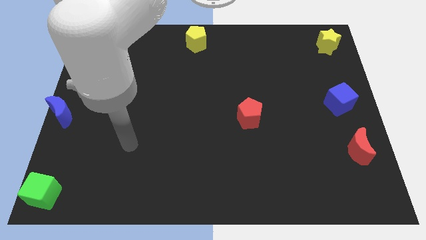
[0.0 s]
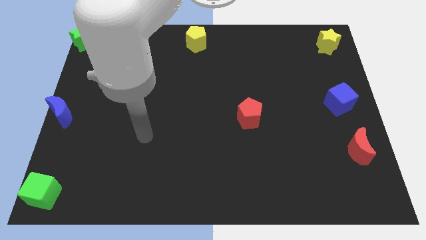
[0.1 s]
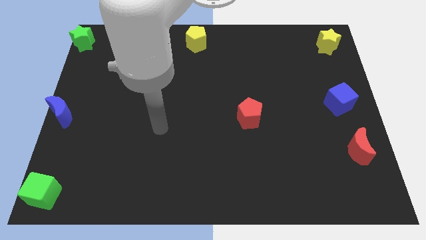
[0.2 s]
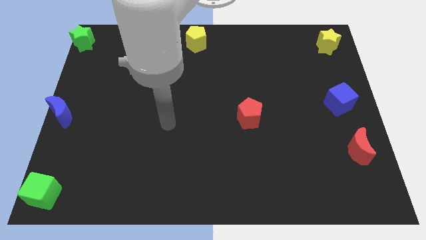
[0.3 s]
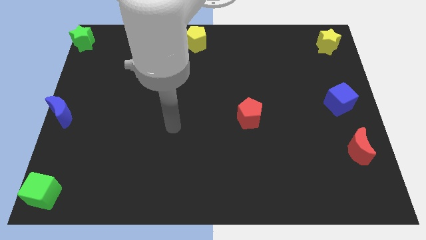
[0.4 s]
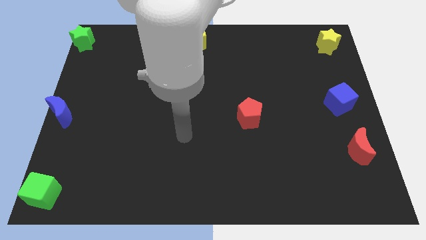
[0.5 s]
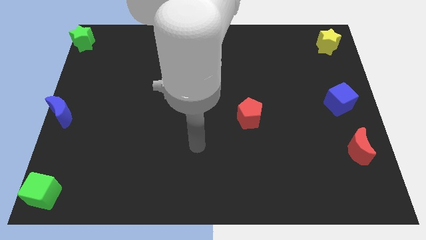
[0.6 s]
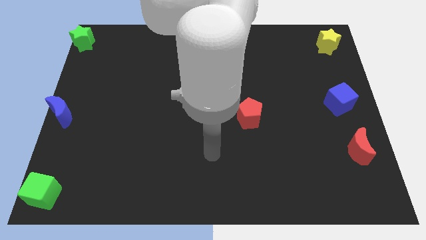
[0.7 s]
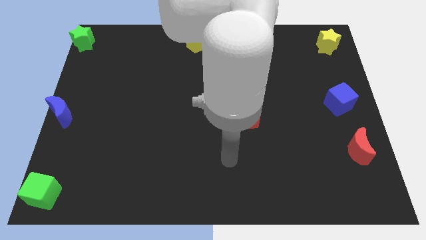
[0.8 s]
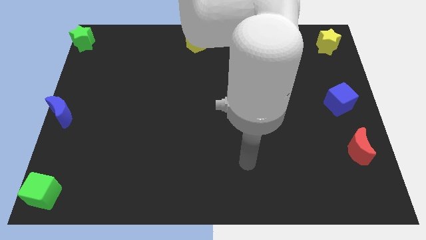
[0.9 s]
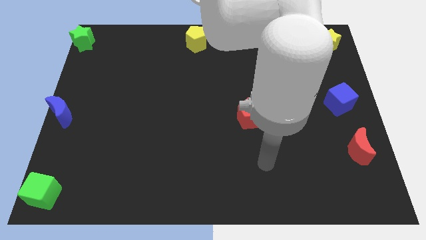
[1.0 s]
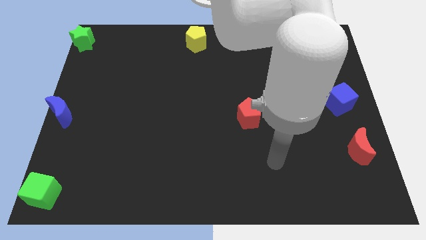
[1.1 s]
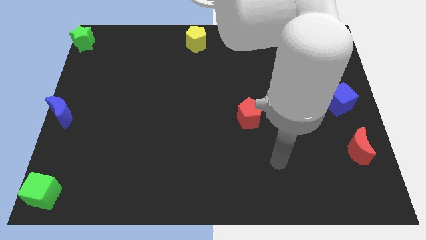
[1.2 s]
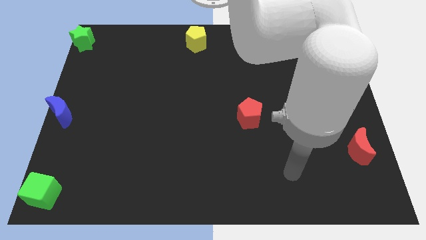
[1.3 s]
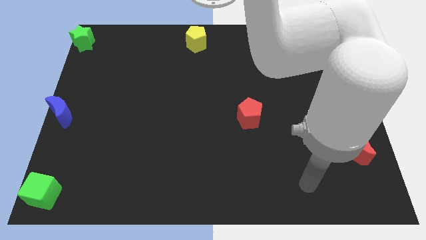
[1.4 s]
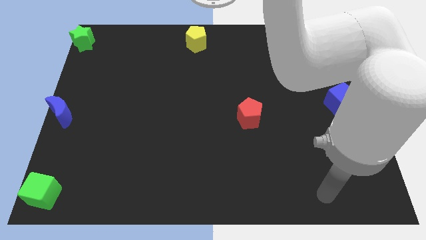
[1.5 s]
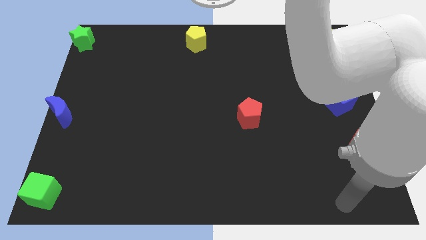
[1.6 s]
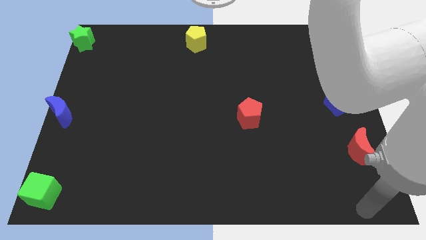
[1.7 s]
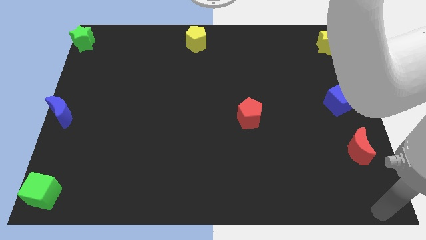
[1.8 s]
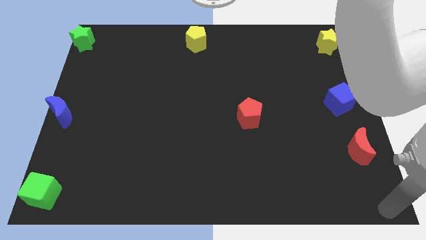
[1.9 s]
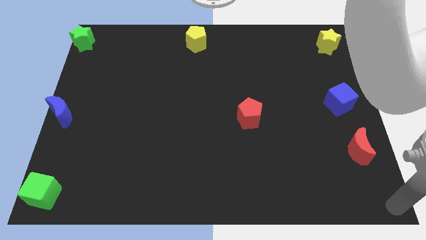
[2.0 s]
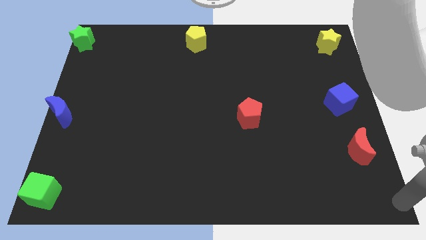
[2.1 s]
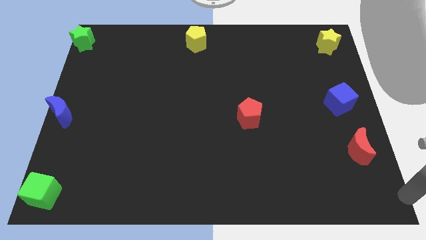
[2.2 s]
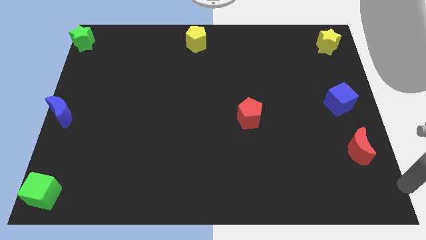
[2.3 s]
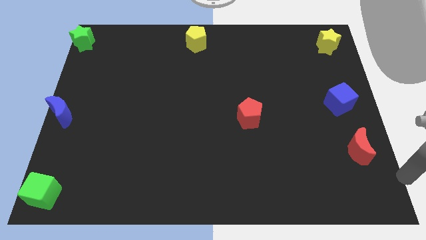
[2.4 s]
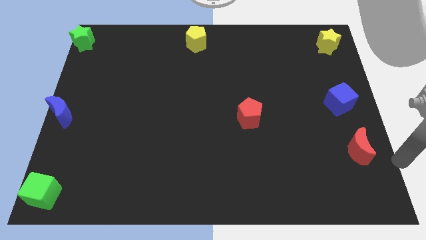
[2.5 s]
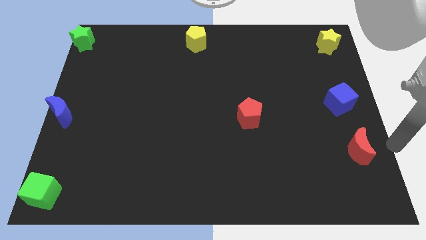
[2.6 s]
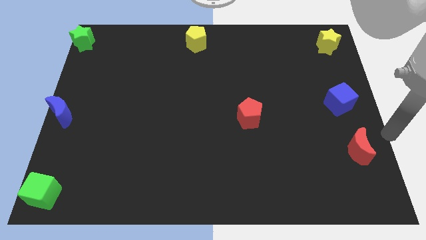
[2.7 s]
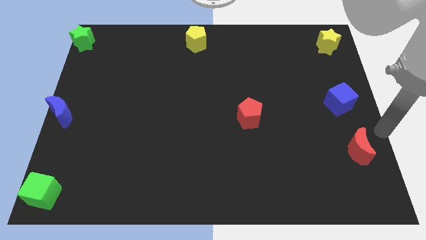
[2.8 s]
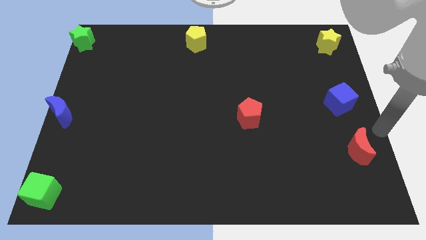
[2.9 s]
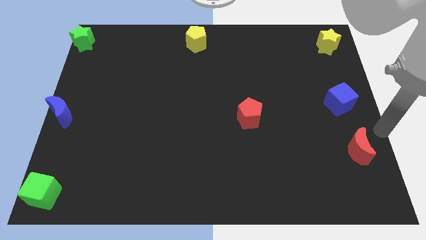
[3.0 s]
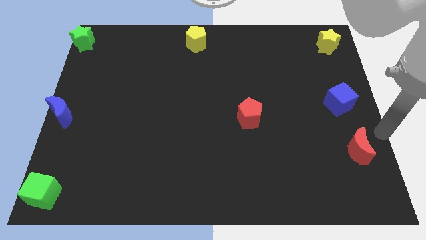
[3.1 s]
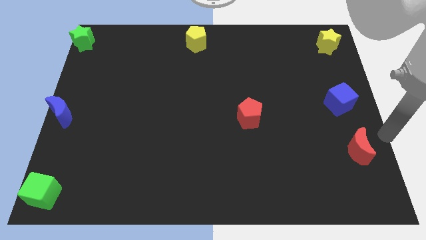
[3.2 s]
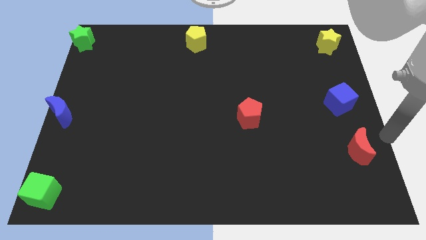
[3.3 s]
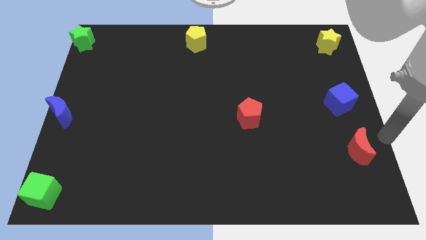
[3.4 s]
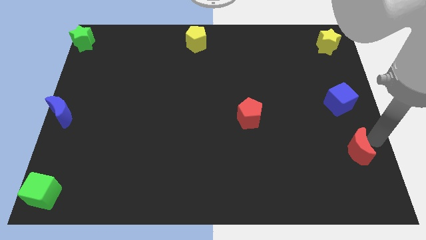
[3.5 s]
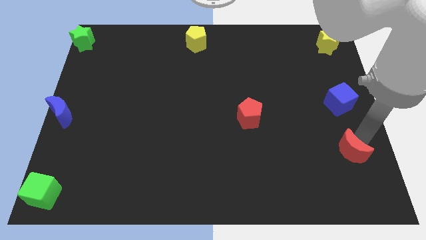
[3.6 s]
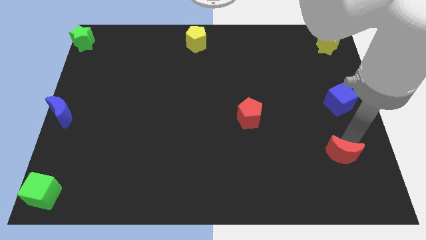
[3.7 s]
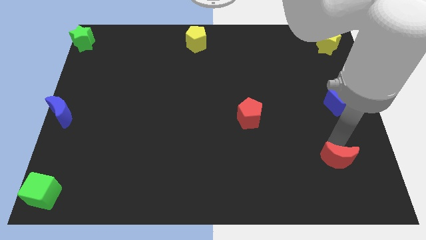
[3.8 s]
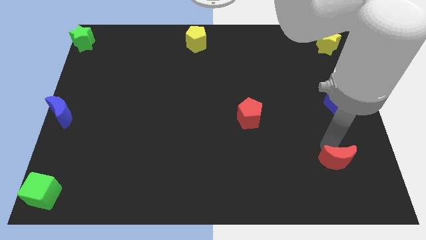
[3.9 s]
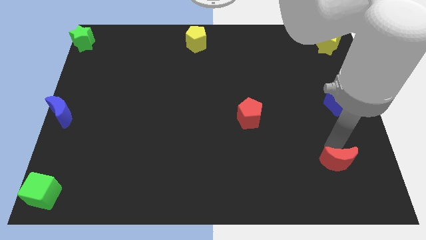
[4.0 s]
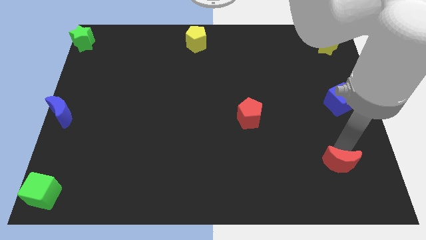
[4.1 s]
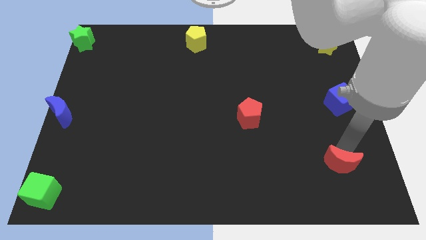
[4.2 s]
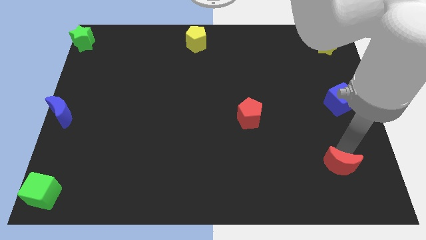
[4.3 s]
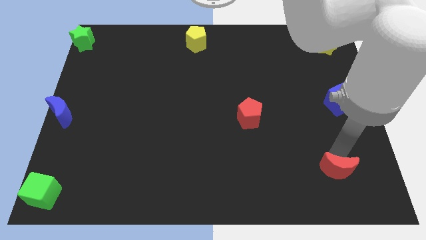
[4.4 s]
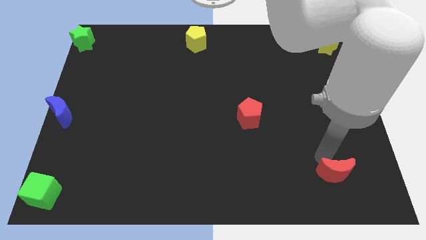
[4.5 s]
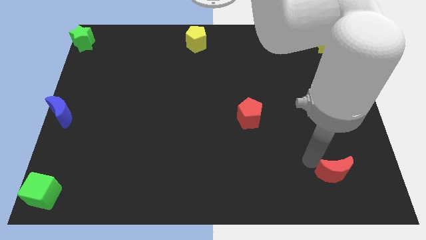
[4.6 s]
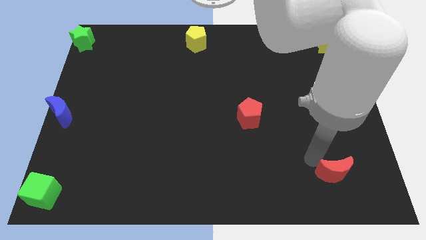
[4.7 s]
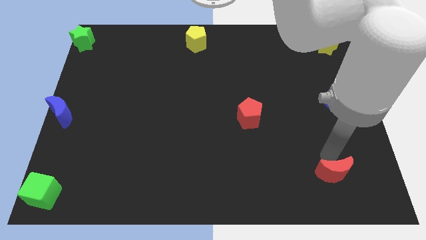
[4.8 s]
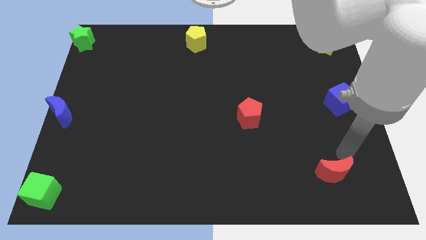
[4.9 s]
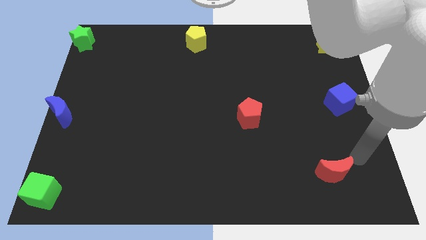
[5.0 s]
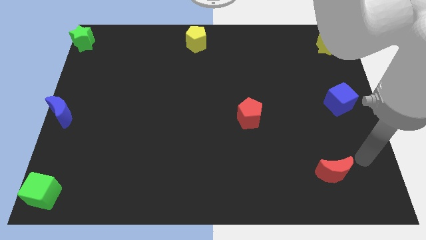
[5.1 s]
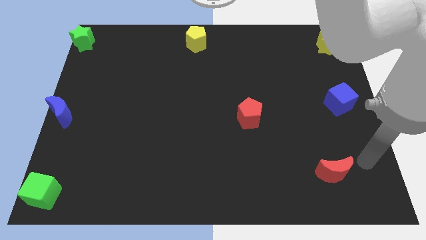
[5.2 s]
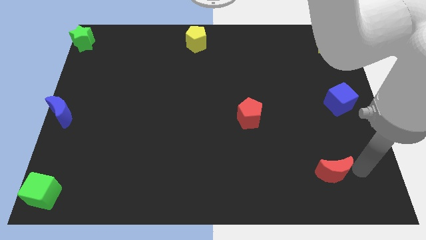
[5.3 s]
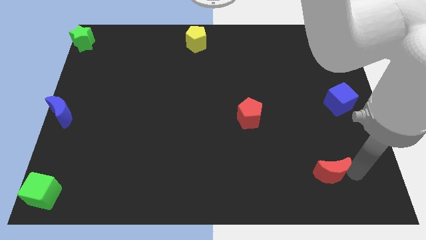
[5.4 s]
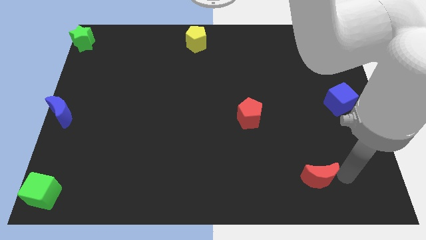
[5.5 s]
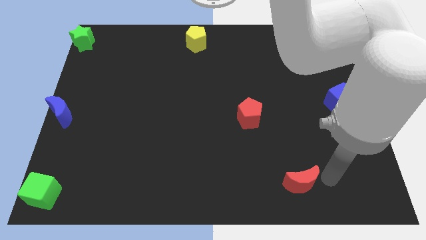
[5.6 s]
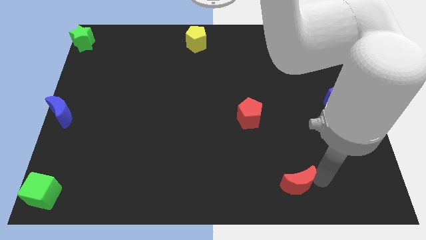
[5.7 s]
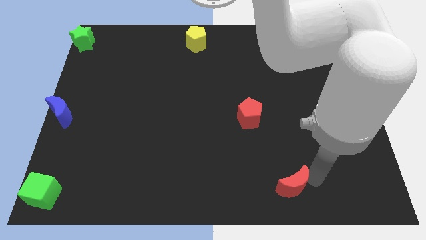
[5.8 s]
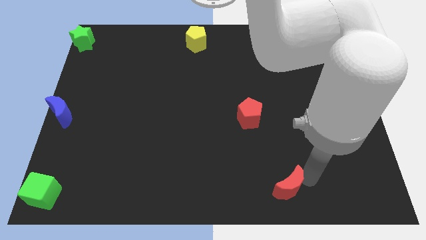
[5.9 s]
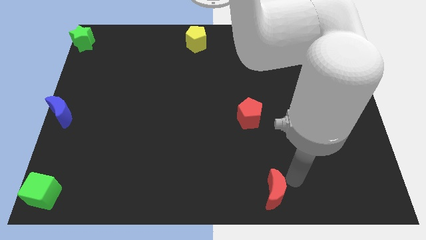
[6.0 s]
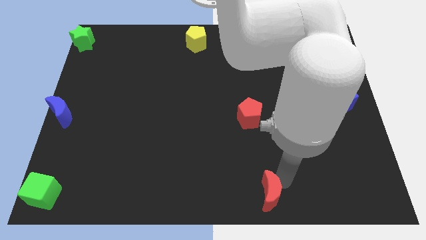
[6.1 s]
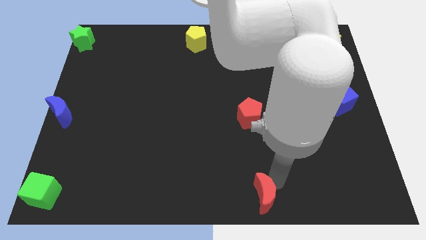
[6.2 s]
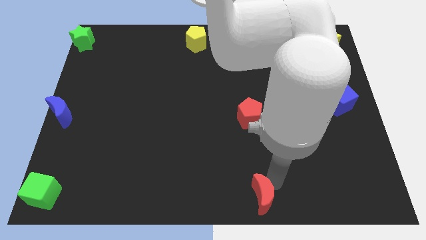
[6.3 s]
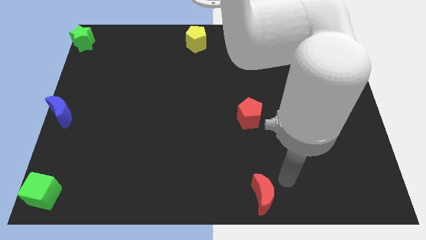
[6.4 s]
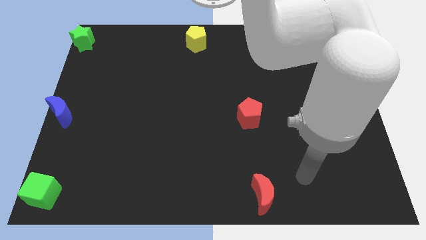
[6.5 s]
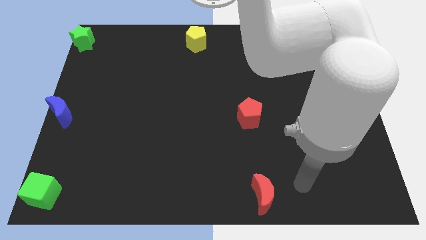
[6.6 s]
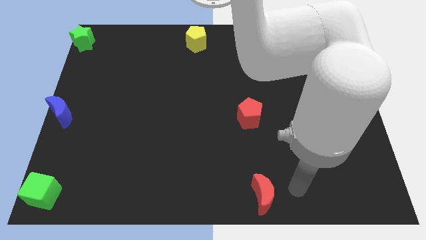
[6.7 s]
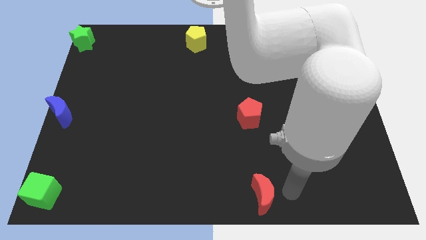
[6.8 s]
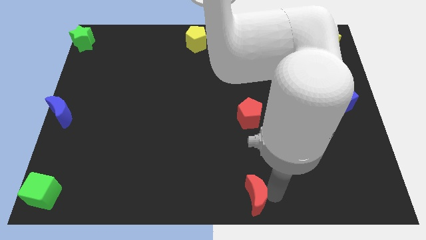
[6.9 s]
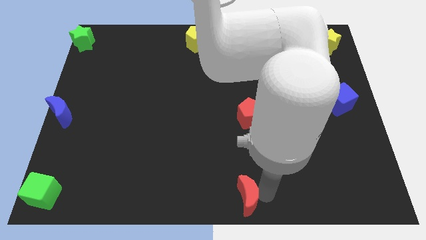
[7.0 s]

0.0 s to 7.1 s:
move red moon below the red pentagon

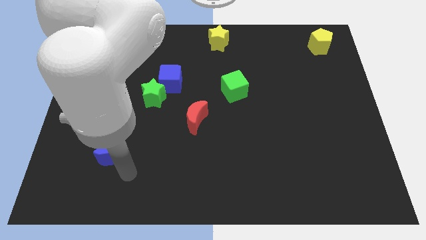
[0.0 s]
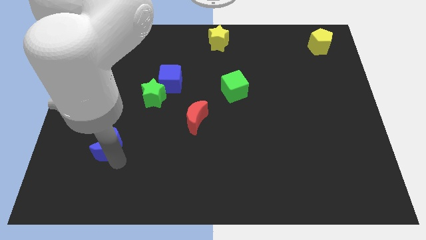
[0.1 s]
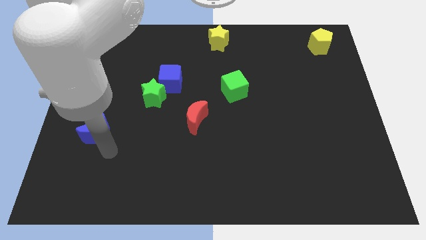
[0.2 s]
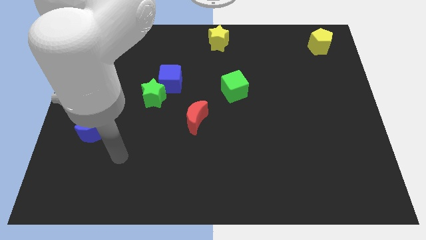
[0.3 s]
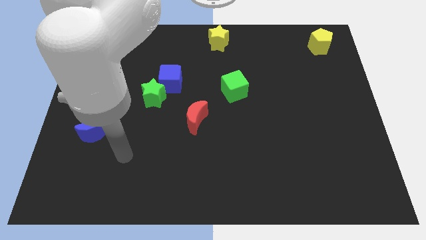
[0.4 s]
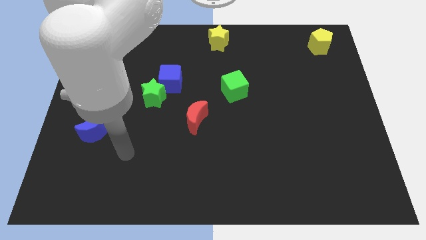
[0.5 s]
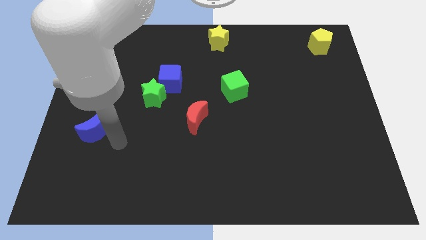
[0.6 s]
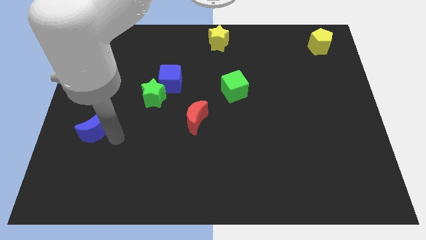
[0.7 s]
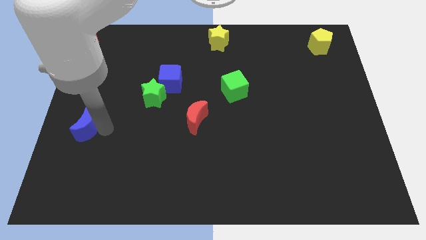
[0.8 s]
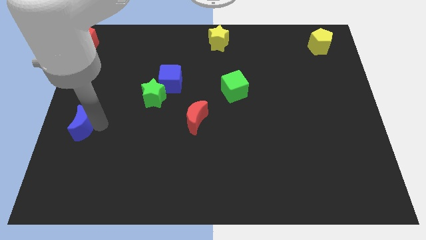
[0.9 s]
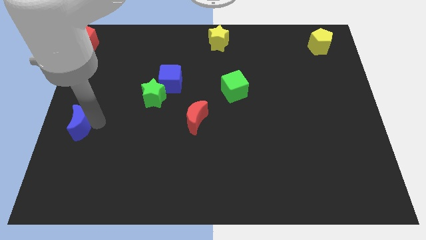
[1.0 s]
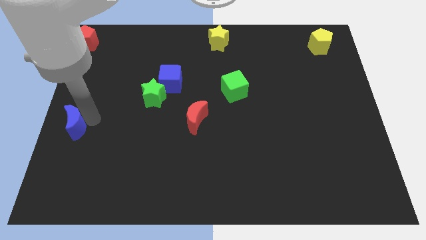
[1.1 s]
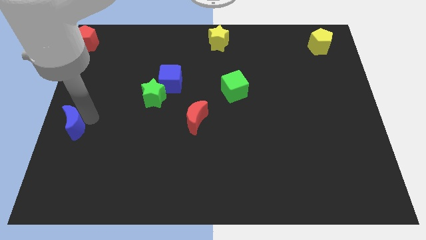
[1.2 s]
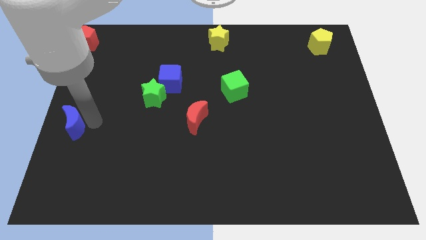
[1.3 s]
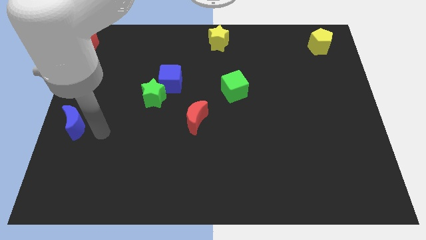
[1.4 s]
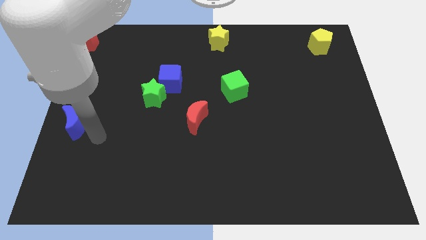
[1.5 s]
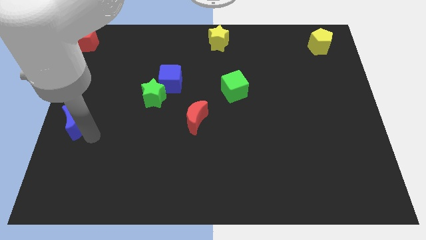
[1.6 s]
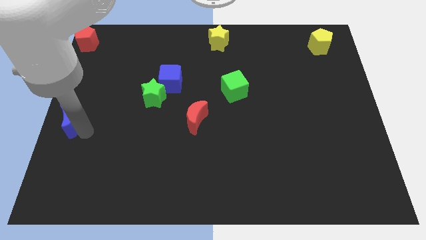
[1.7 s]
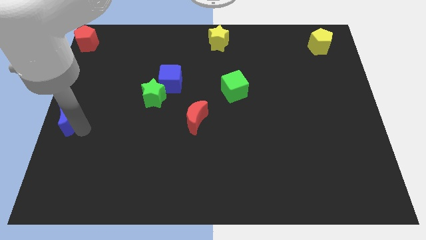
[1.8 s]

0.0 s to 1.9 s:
place the blue moon towards the left center of the board

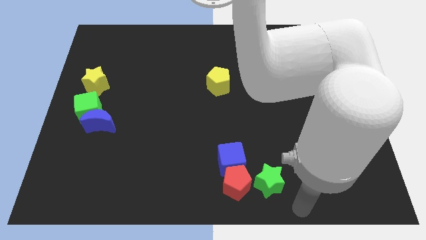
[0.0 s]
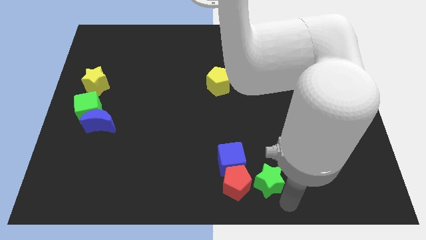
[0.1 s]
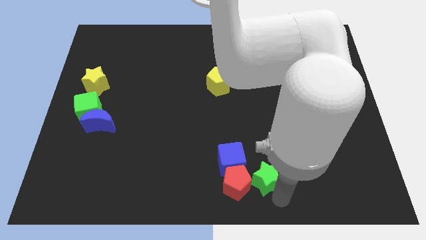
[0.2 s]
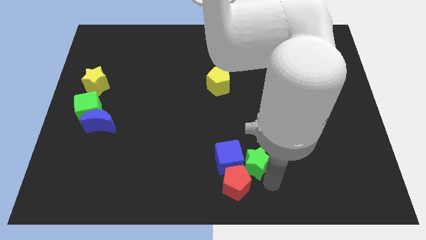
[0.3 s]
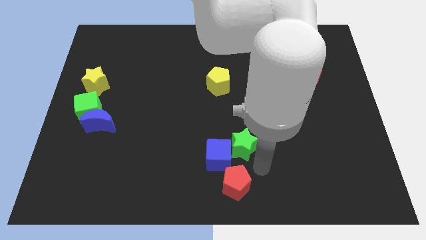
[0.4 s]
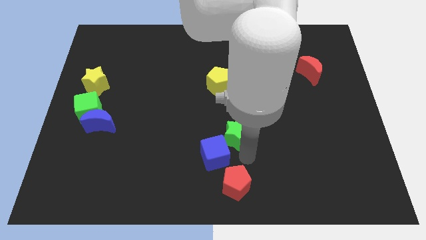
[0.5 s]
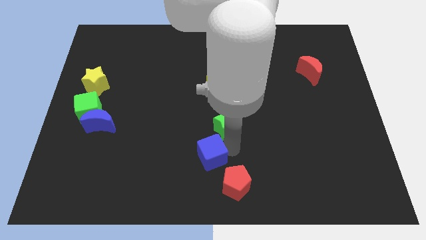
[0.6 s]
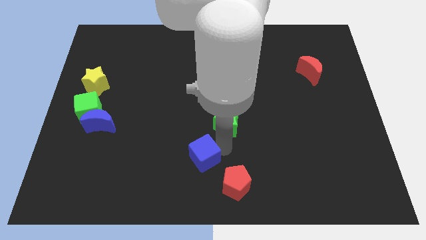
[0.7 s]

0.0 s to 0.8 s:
place the green star at the top right of the blue cube
